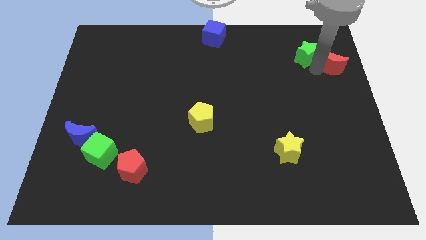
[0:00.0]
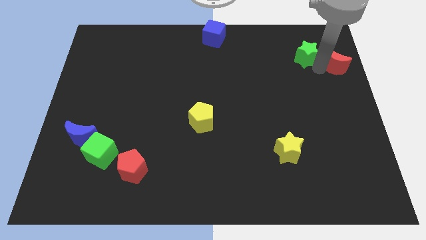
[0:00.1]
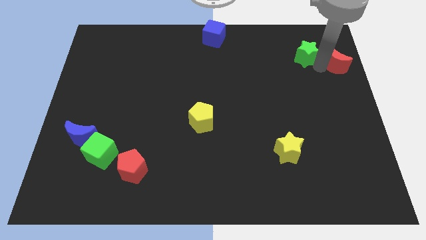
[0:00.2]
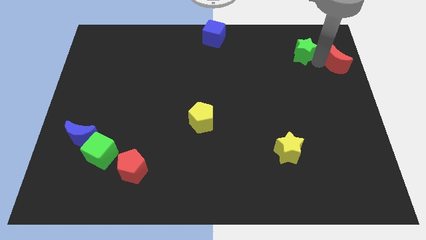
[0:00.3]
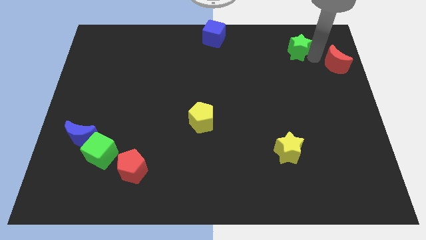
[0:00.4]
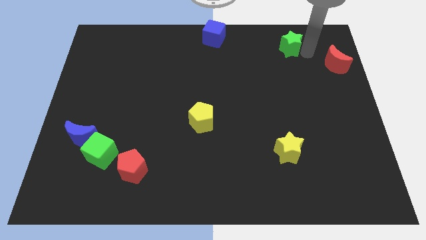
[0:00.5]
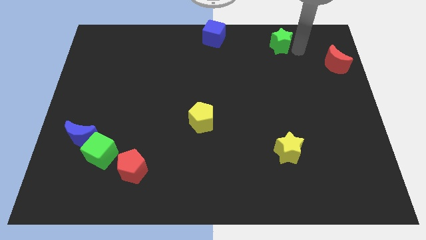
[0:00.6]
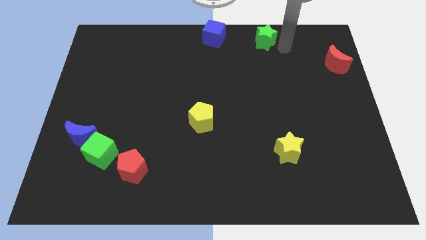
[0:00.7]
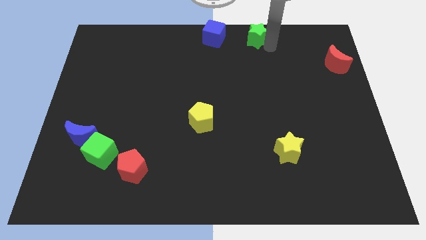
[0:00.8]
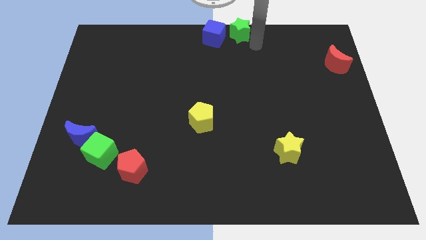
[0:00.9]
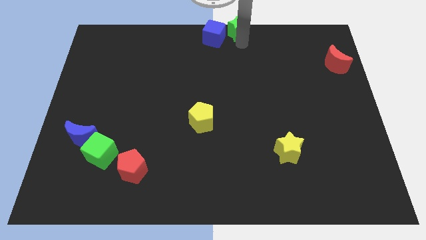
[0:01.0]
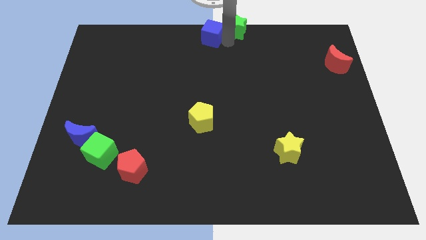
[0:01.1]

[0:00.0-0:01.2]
place the green star to the top center of the board

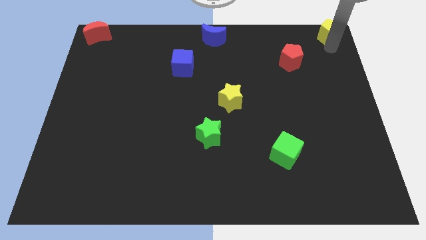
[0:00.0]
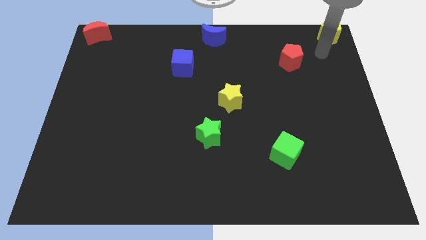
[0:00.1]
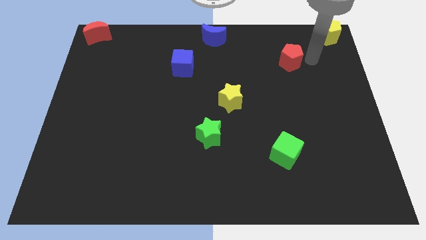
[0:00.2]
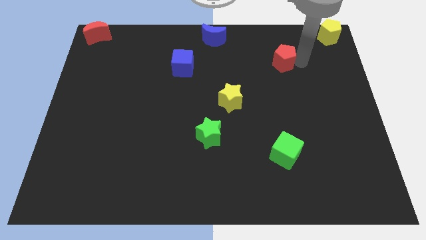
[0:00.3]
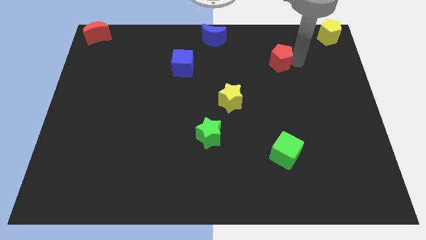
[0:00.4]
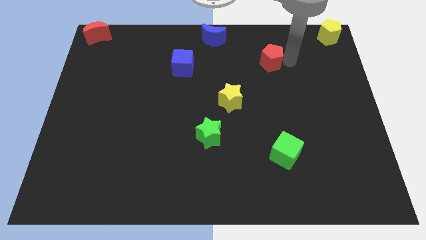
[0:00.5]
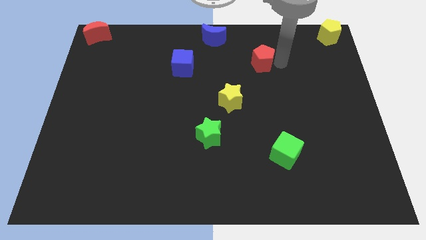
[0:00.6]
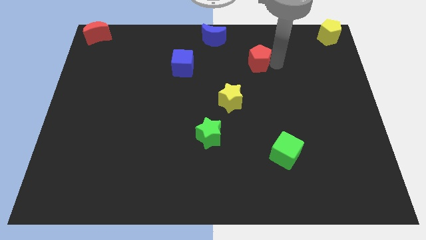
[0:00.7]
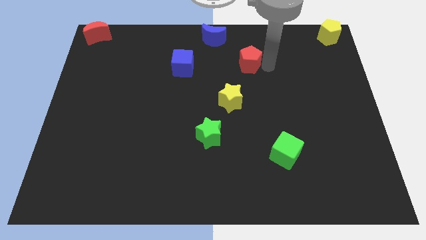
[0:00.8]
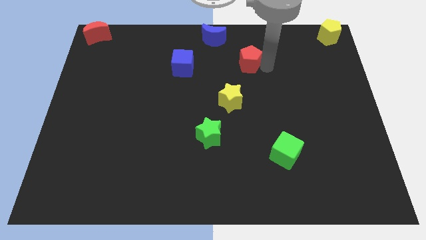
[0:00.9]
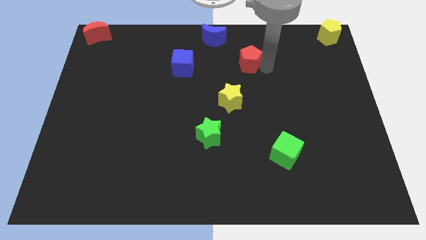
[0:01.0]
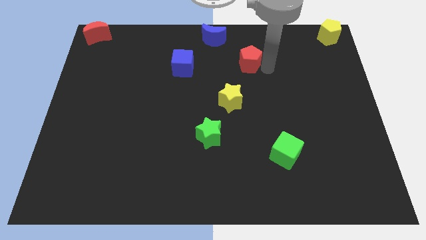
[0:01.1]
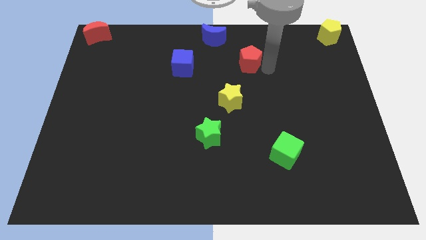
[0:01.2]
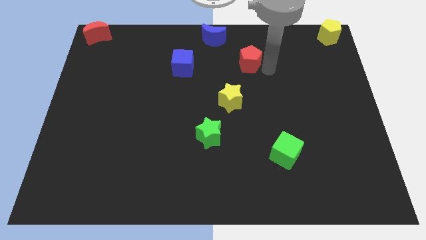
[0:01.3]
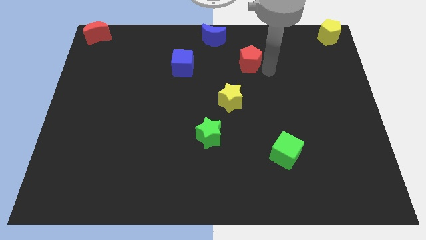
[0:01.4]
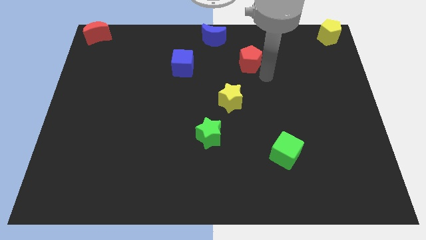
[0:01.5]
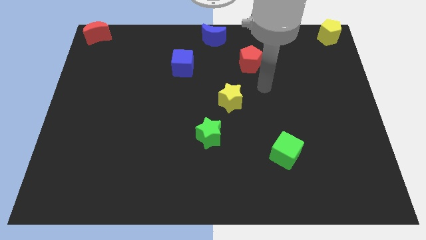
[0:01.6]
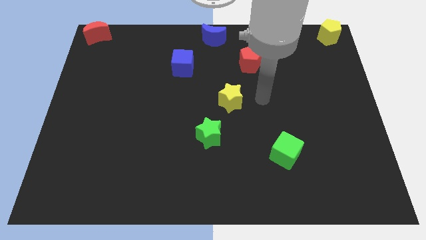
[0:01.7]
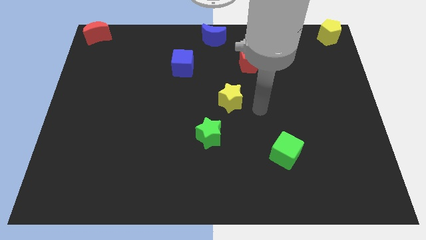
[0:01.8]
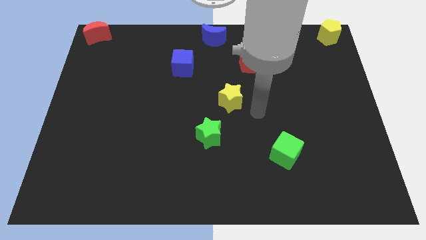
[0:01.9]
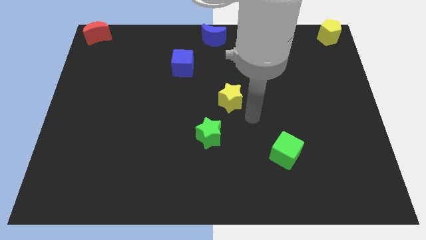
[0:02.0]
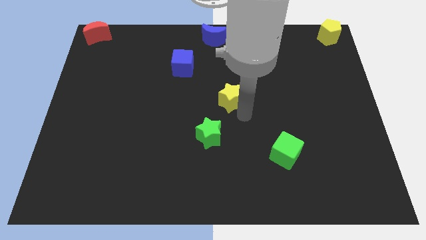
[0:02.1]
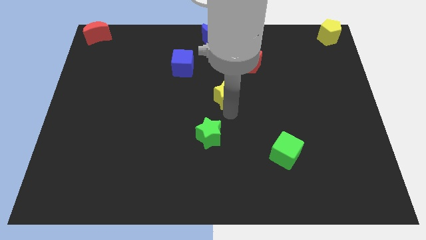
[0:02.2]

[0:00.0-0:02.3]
move the red pentagon diagonal above the yellow star

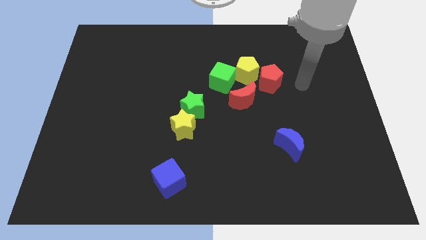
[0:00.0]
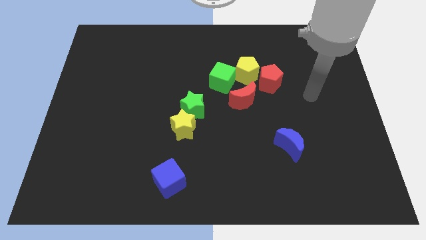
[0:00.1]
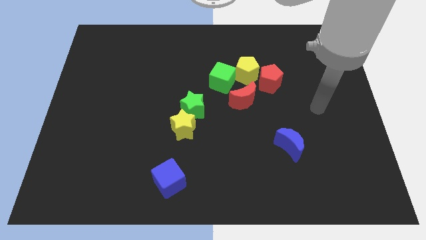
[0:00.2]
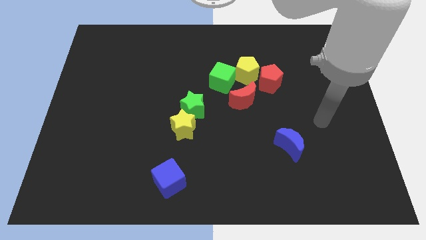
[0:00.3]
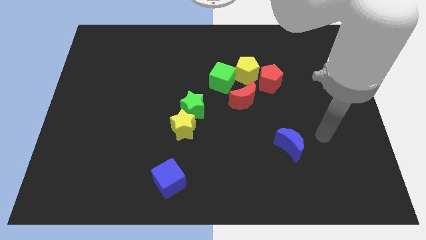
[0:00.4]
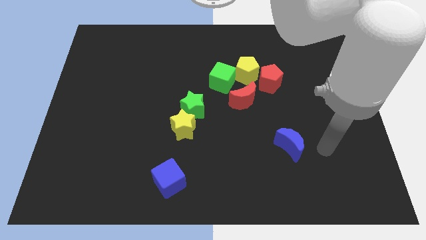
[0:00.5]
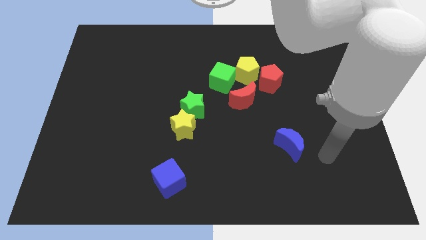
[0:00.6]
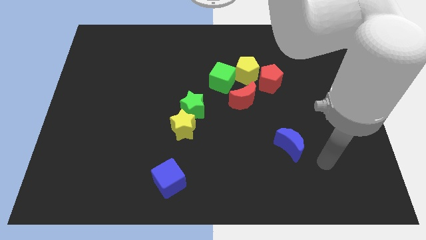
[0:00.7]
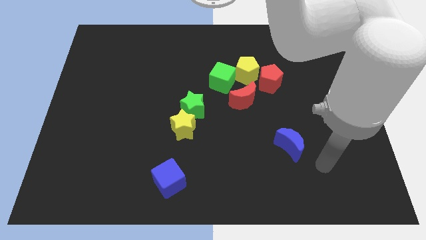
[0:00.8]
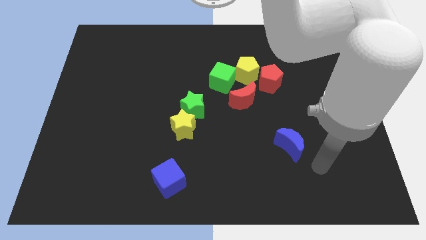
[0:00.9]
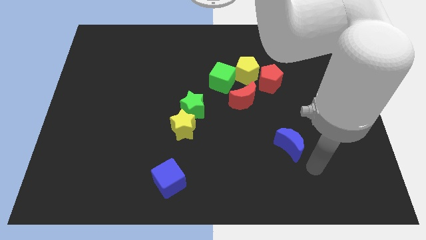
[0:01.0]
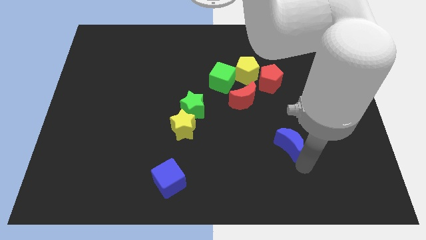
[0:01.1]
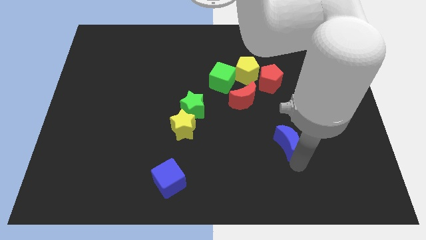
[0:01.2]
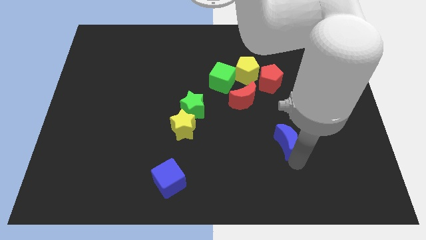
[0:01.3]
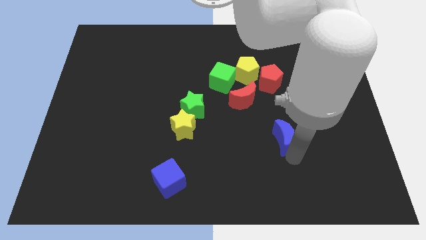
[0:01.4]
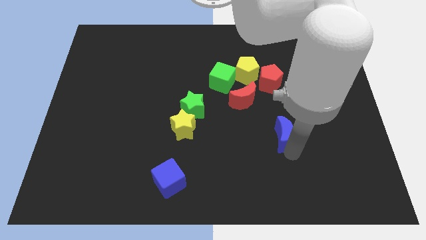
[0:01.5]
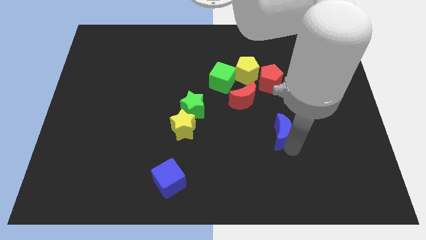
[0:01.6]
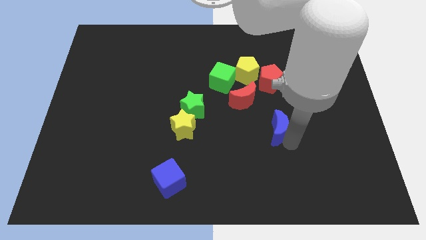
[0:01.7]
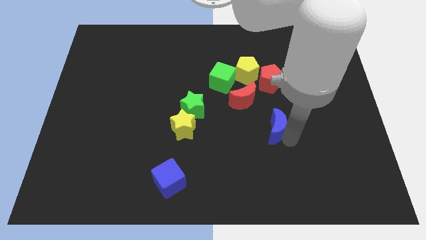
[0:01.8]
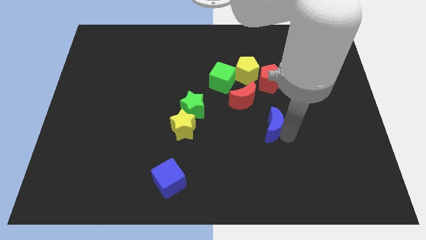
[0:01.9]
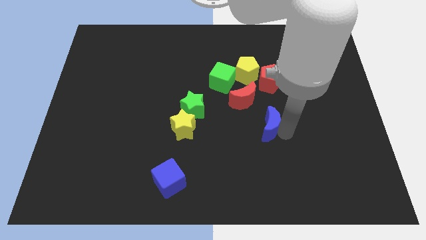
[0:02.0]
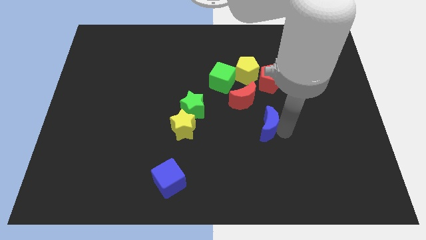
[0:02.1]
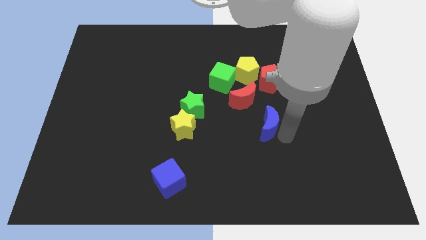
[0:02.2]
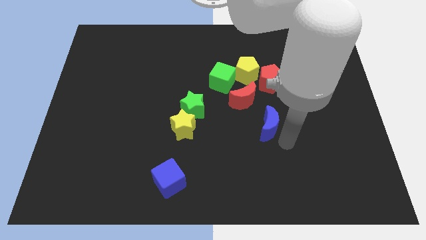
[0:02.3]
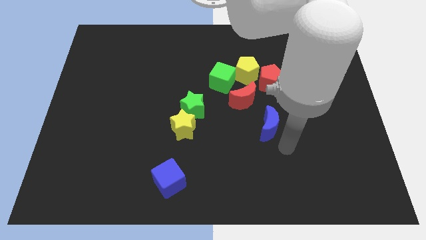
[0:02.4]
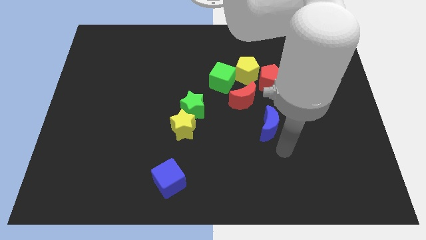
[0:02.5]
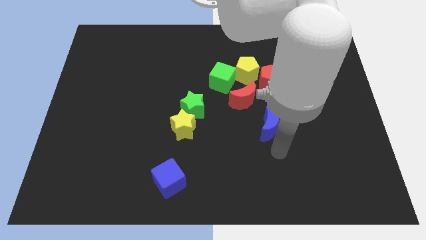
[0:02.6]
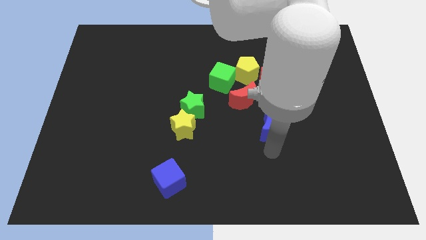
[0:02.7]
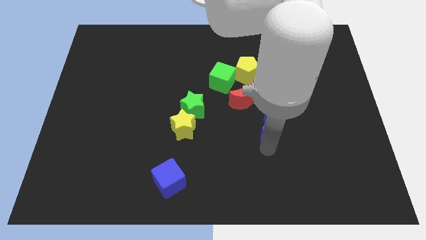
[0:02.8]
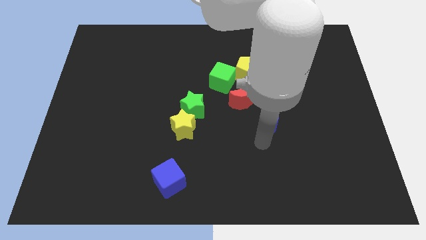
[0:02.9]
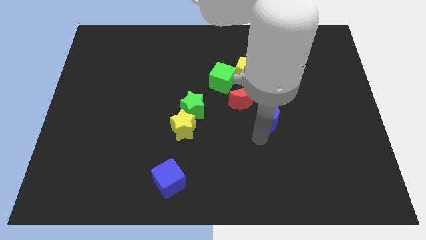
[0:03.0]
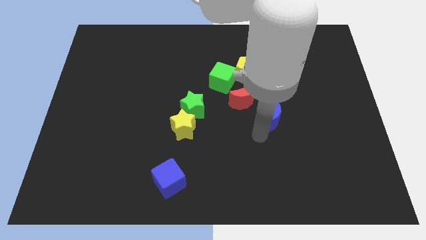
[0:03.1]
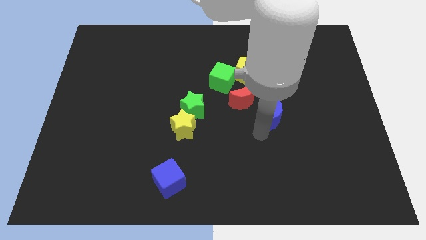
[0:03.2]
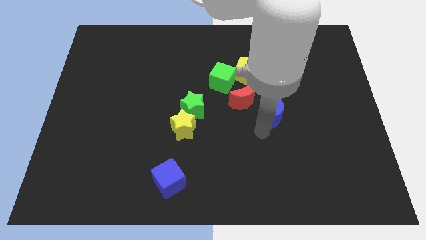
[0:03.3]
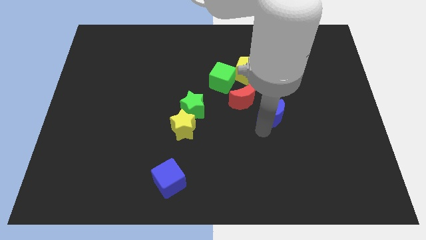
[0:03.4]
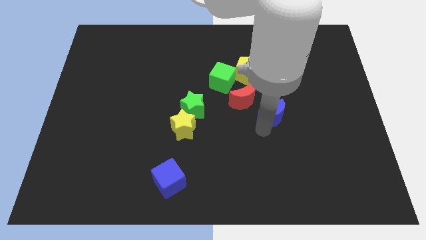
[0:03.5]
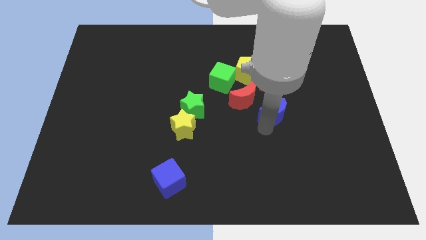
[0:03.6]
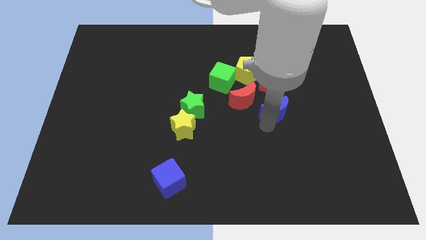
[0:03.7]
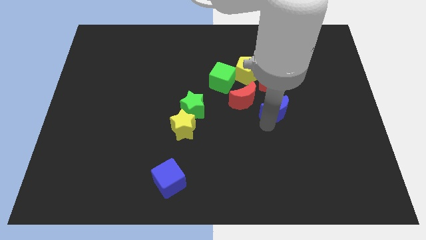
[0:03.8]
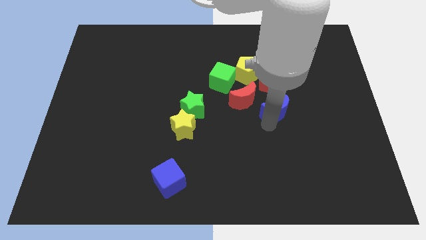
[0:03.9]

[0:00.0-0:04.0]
push the blue crescent towards the group of blocks

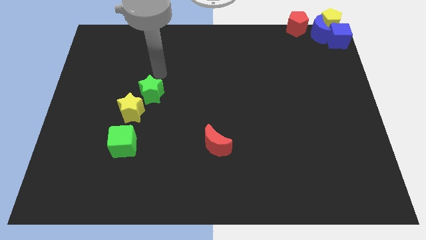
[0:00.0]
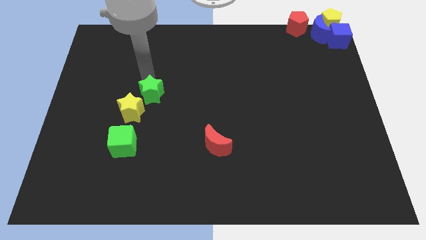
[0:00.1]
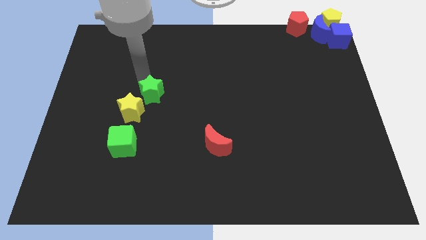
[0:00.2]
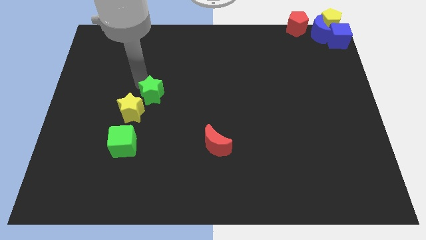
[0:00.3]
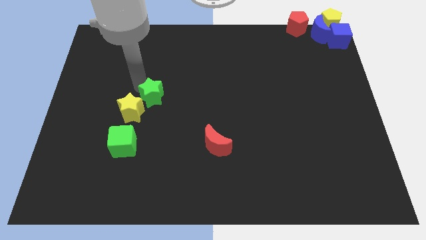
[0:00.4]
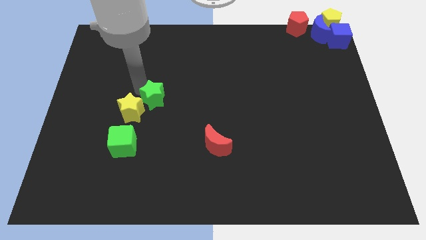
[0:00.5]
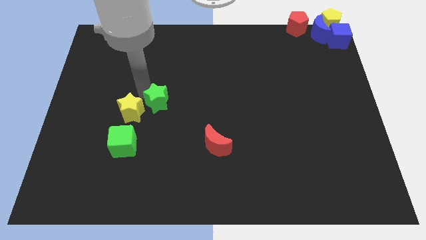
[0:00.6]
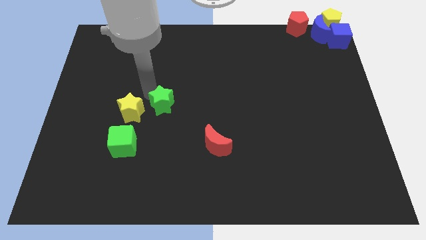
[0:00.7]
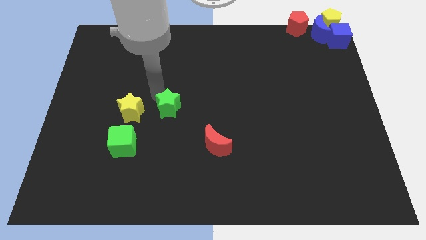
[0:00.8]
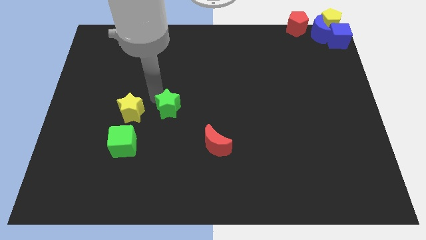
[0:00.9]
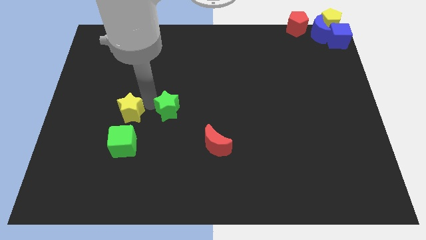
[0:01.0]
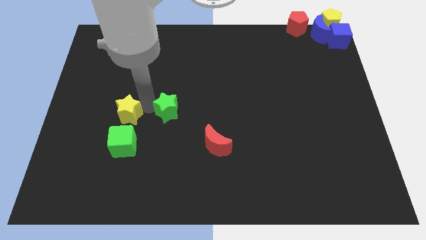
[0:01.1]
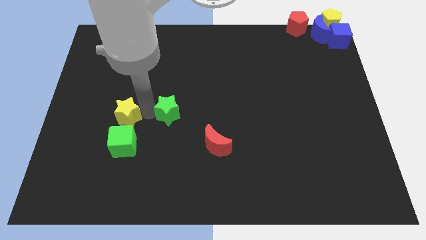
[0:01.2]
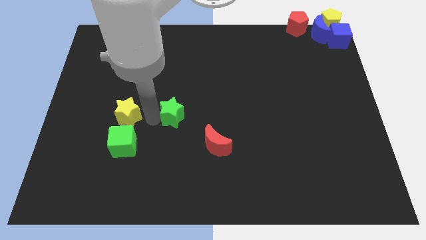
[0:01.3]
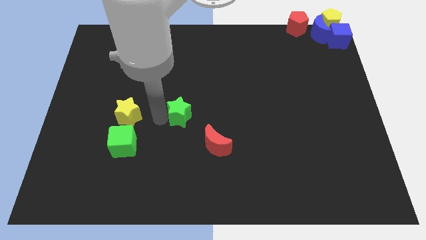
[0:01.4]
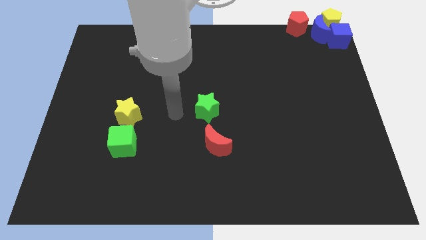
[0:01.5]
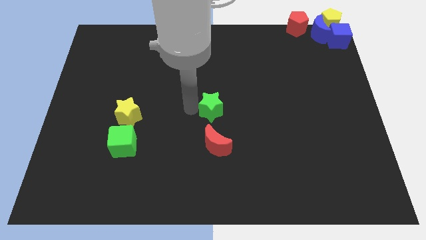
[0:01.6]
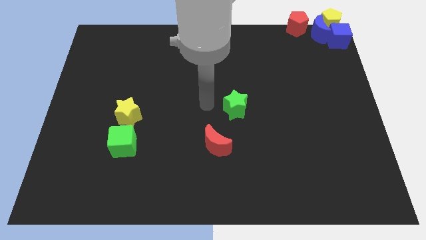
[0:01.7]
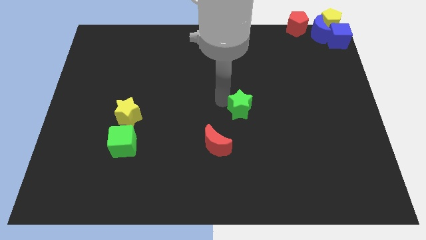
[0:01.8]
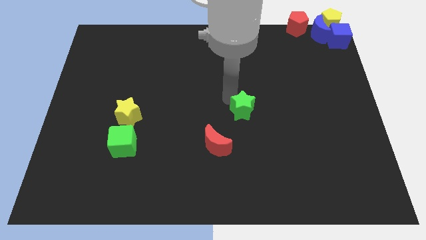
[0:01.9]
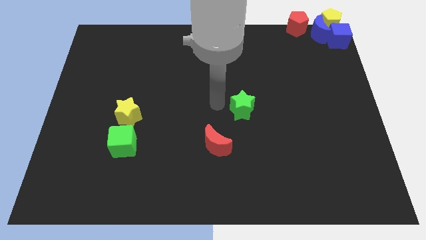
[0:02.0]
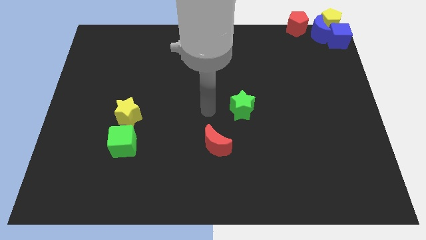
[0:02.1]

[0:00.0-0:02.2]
push the green stardiagonally top right to the red moon
